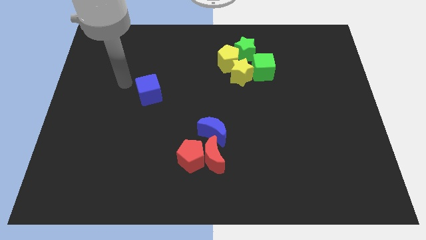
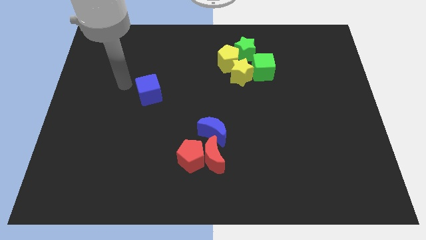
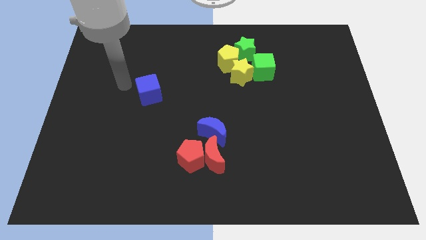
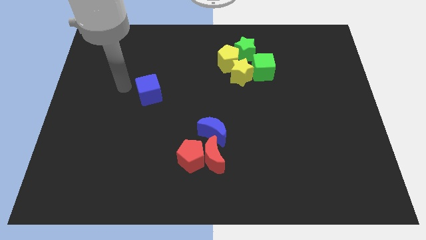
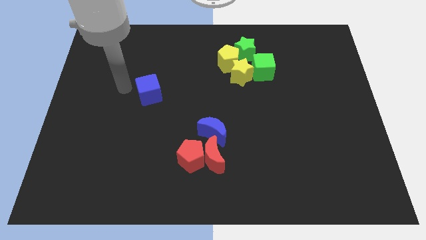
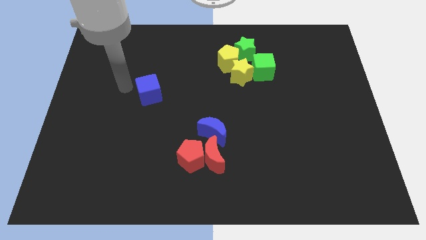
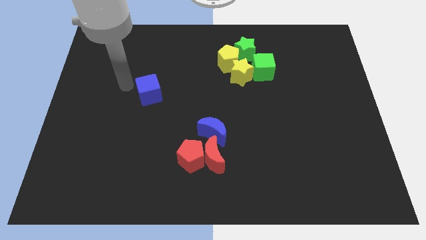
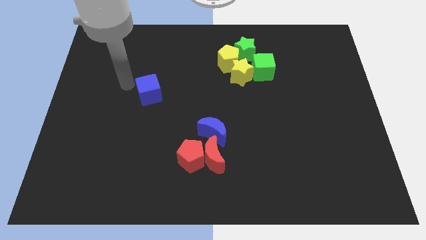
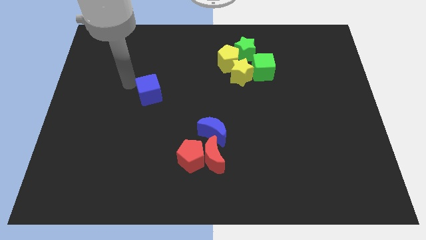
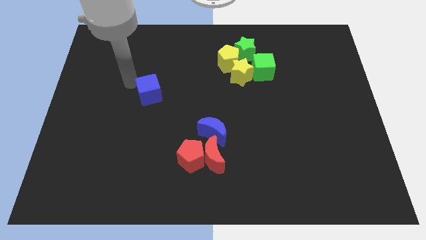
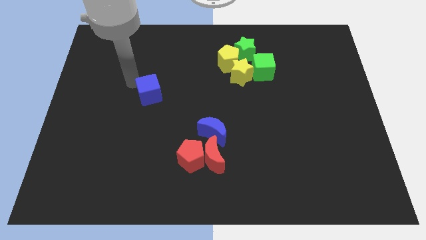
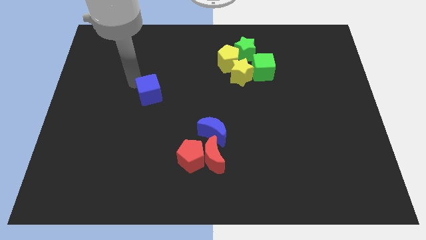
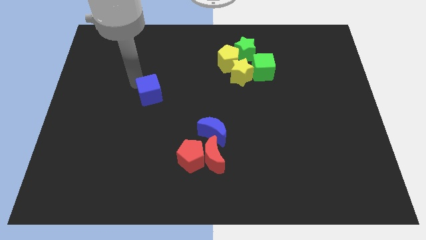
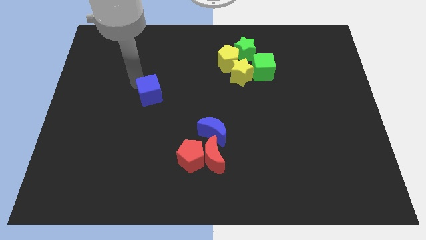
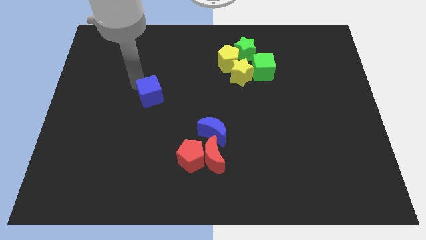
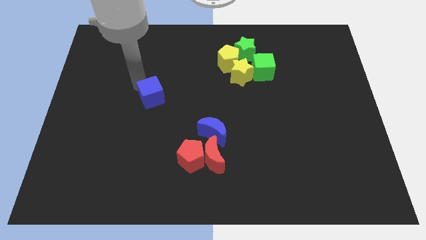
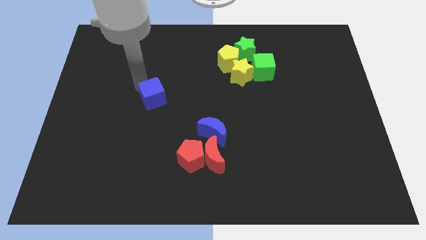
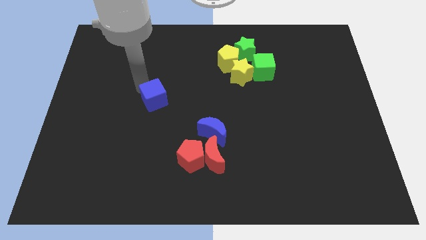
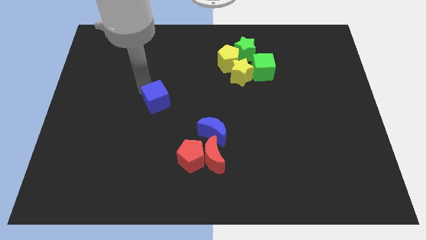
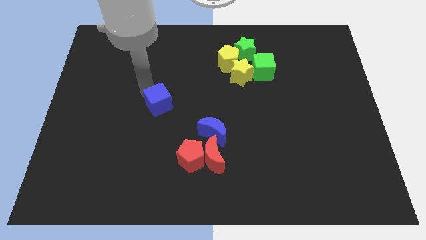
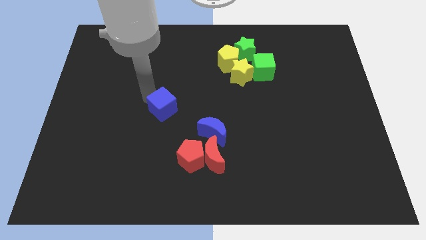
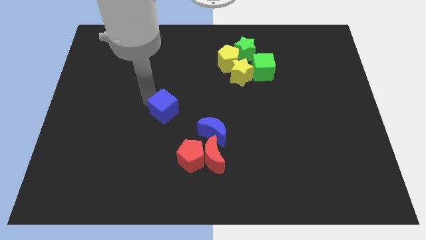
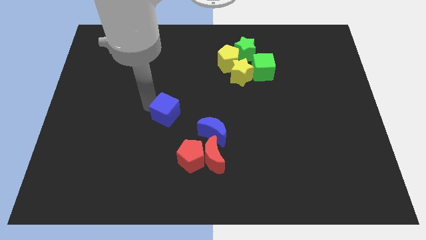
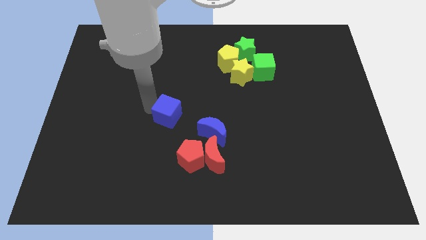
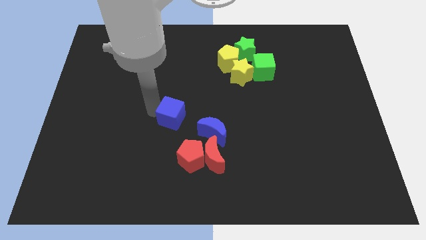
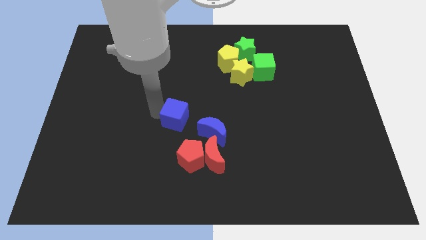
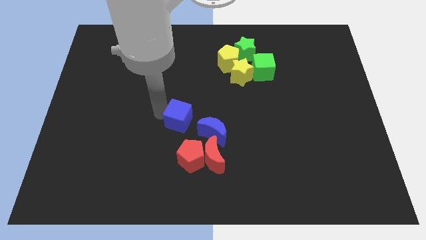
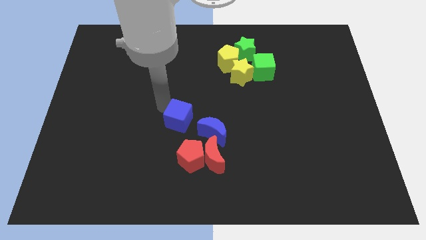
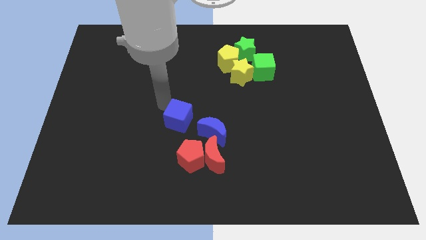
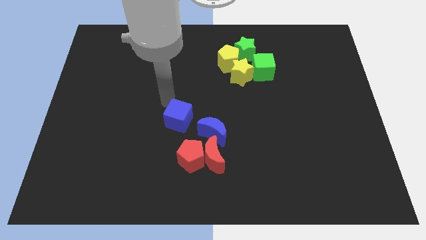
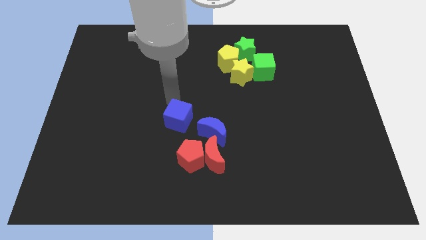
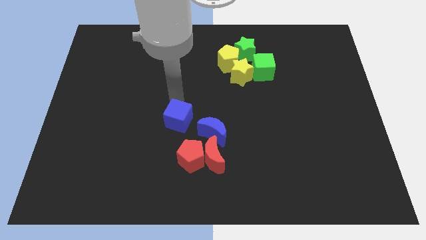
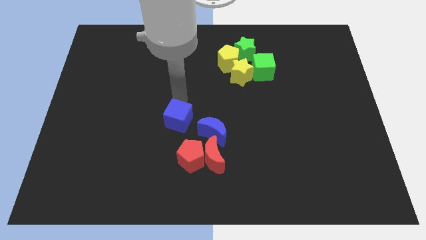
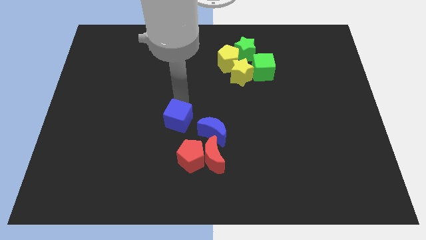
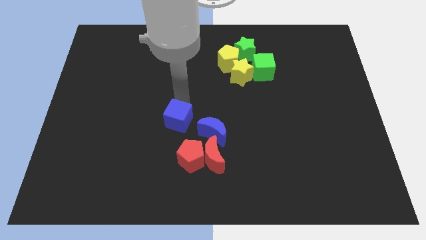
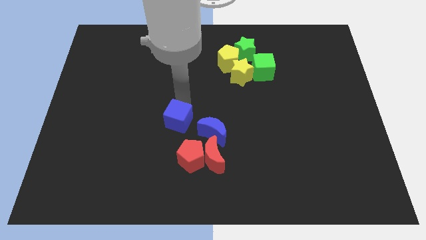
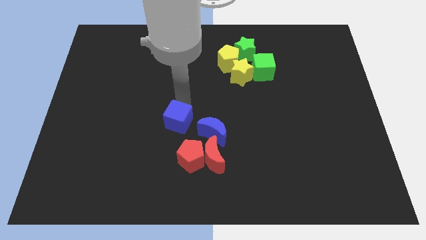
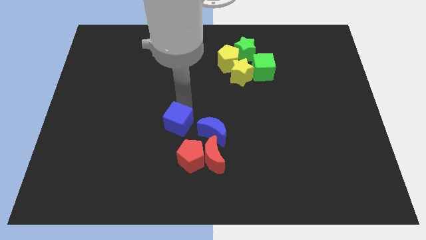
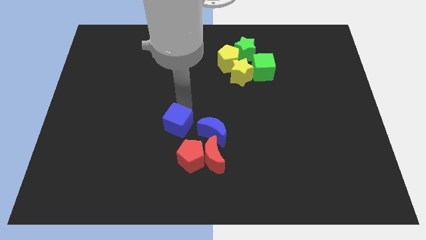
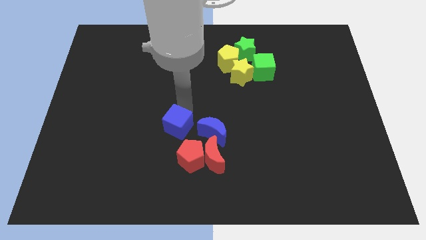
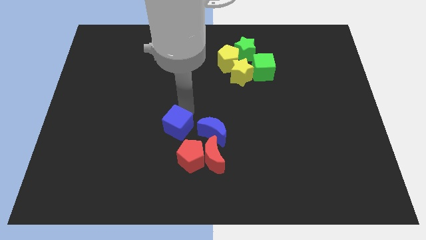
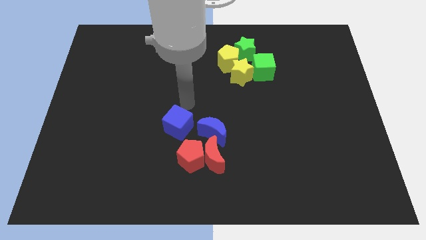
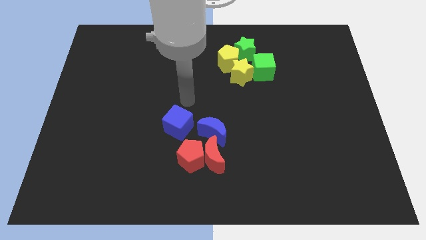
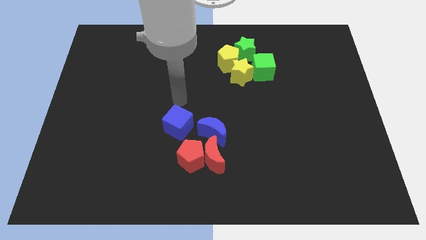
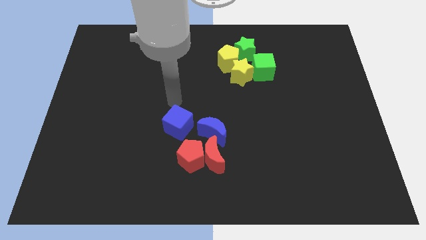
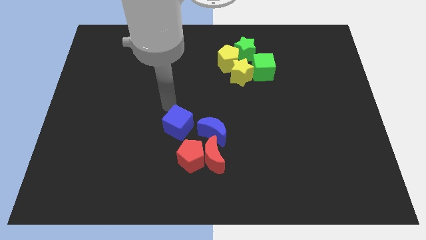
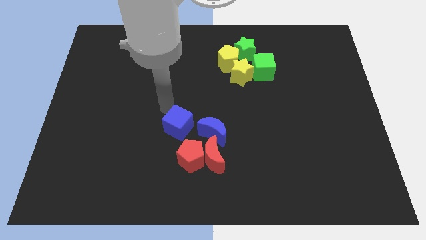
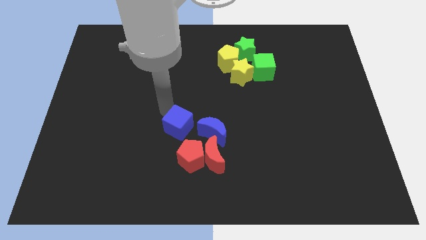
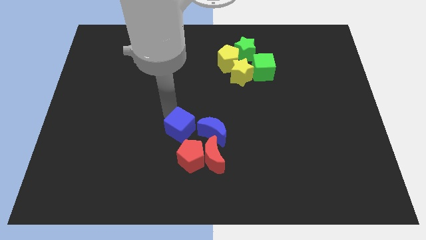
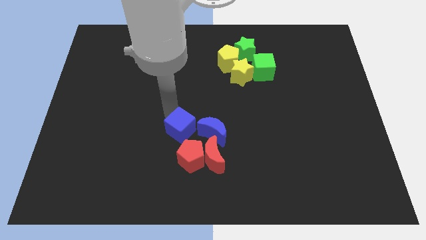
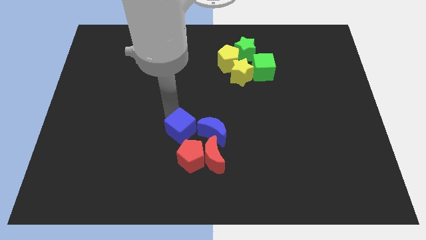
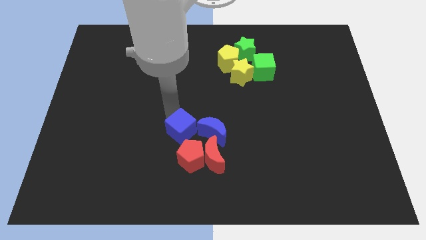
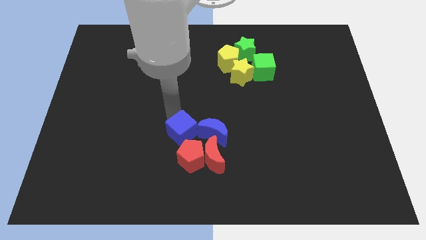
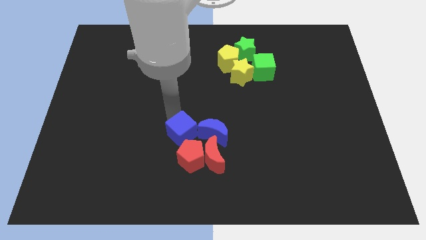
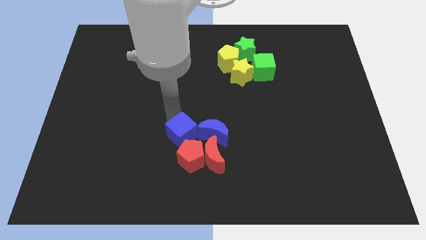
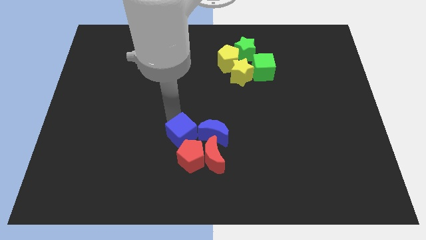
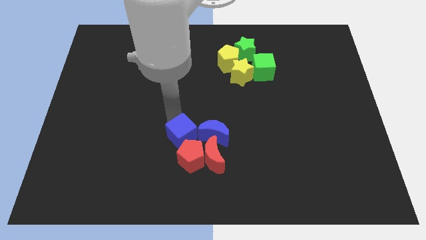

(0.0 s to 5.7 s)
push the blue cube to the left of the blue crescent

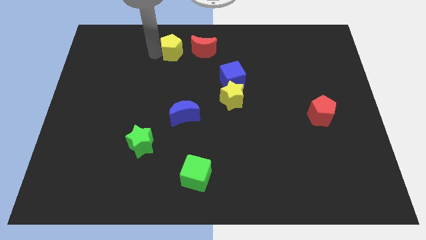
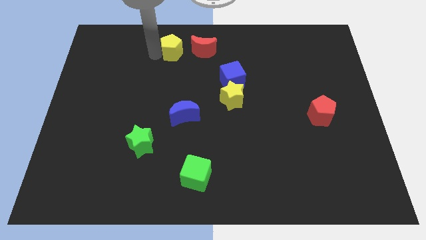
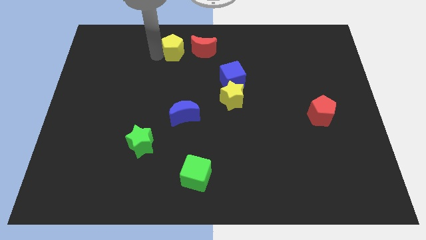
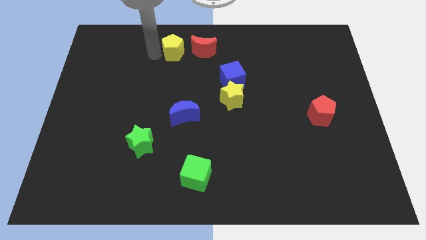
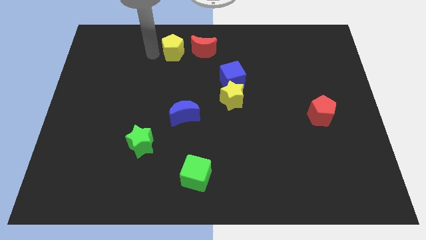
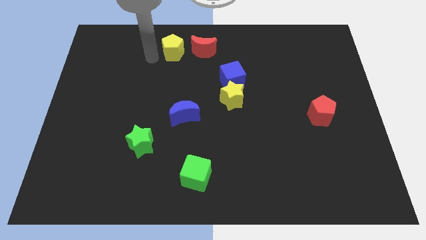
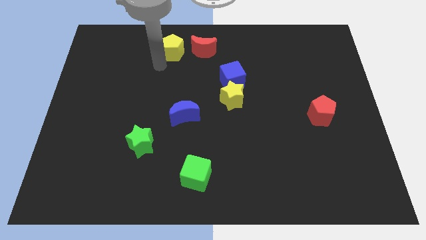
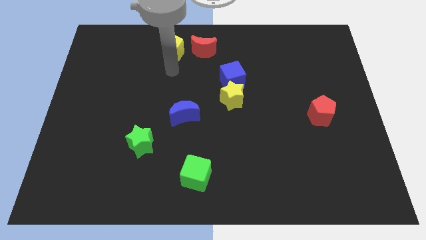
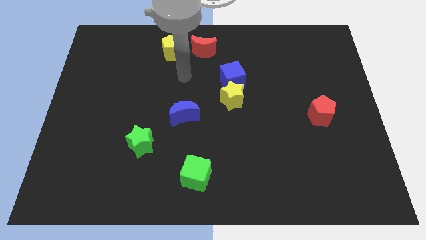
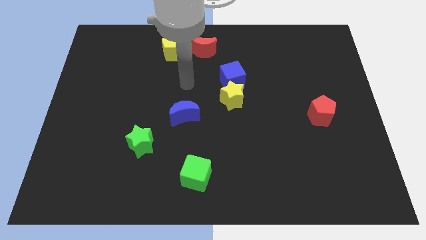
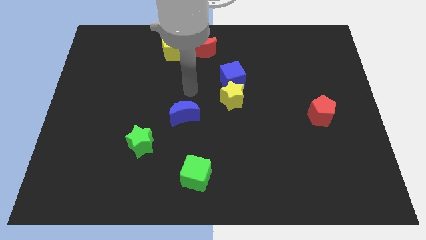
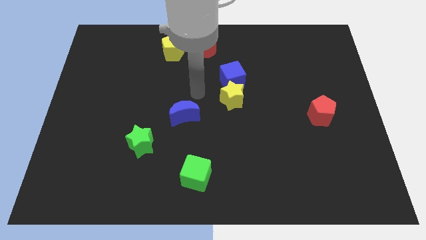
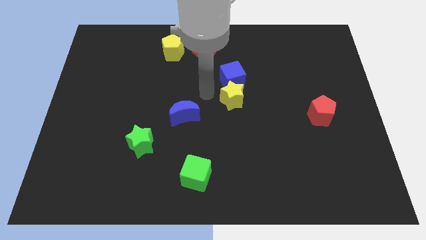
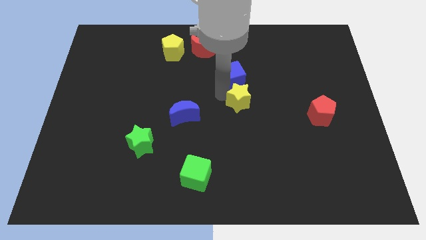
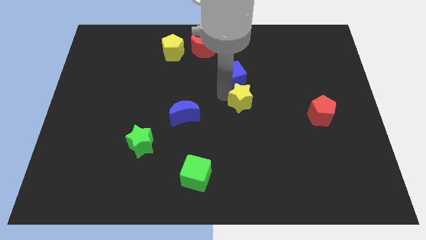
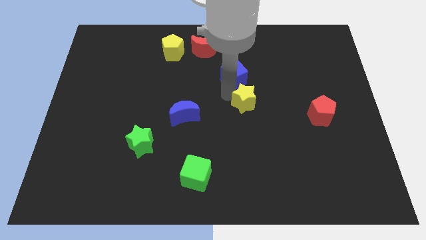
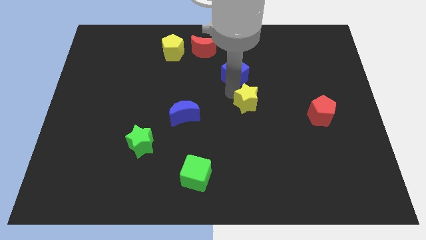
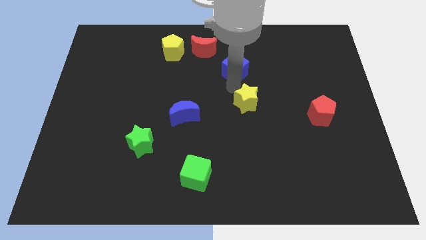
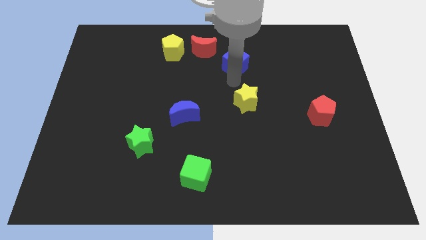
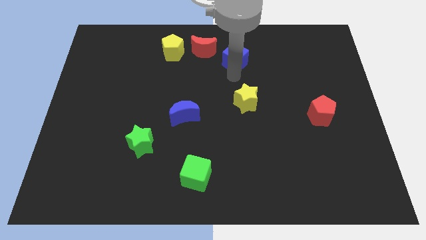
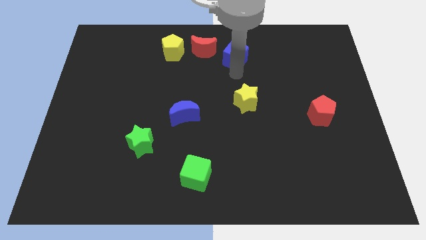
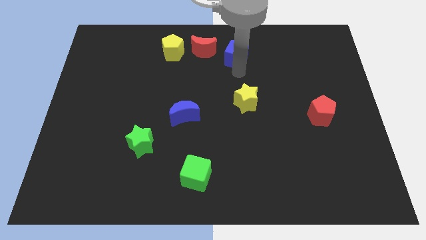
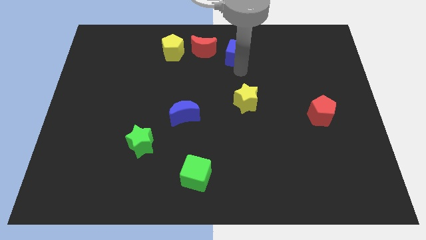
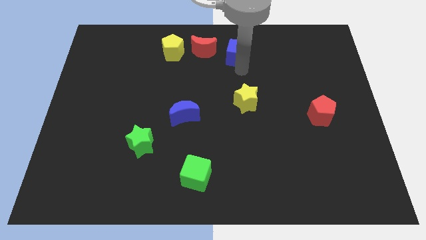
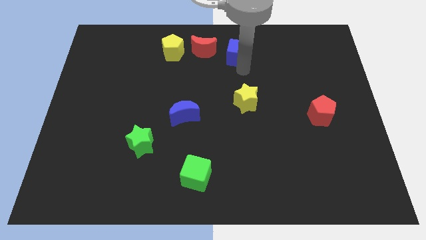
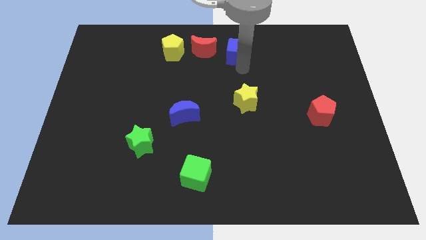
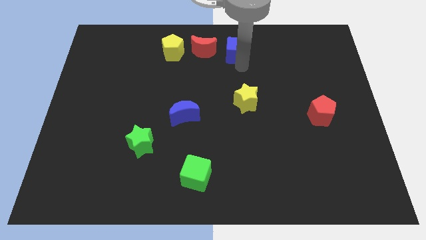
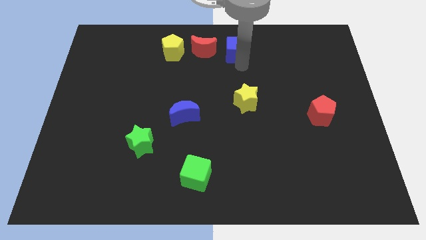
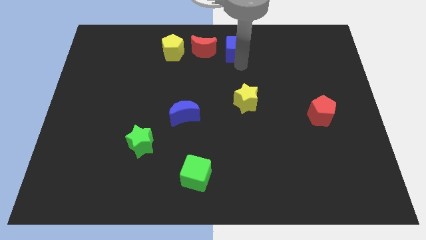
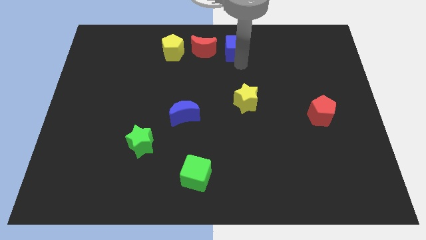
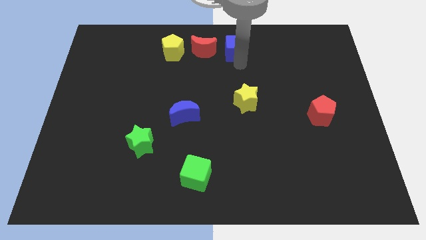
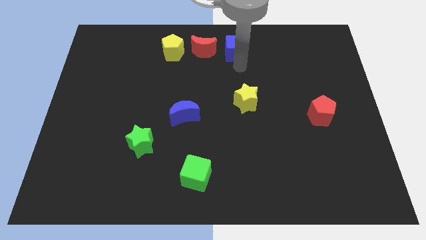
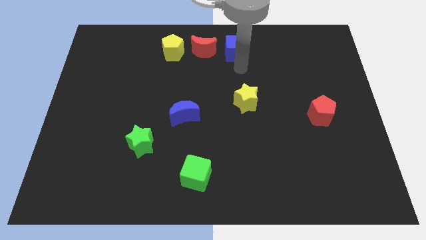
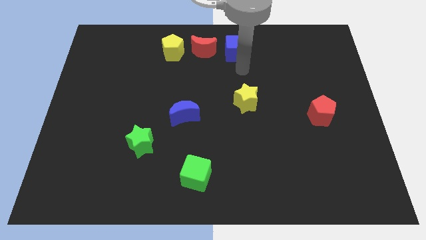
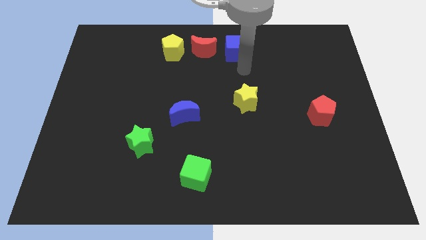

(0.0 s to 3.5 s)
push the blue cube to the right of the red crescent
